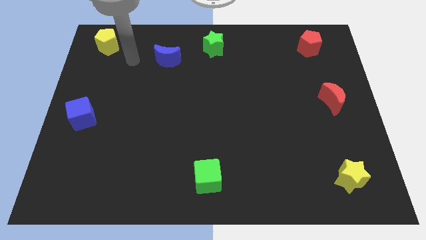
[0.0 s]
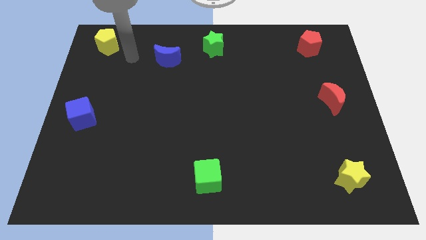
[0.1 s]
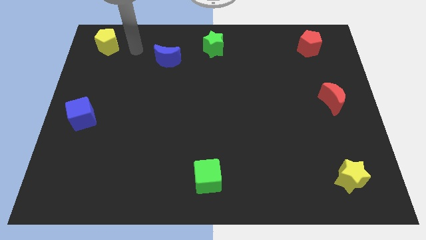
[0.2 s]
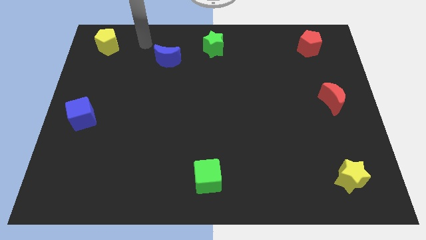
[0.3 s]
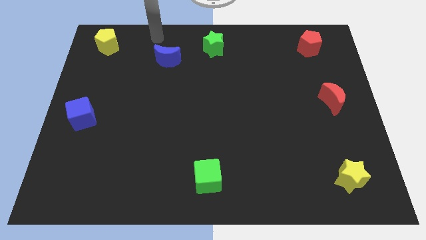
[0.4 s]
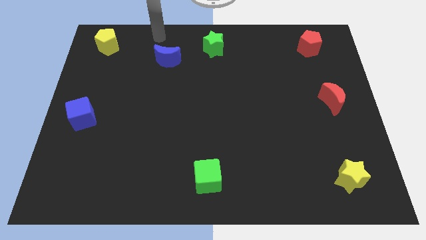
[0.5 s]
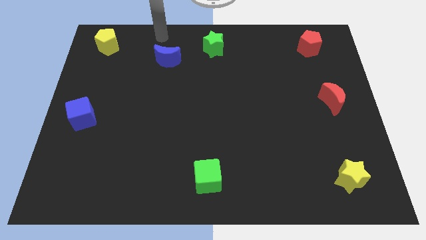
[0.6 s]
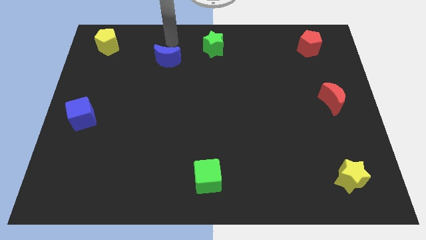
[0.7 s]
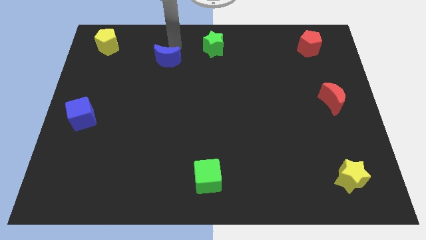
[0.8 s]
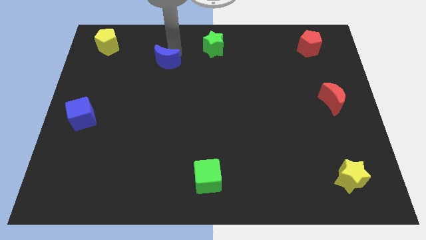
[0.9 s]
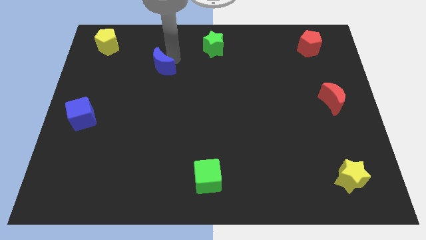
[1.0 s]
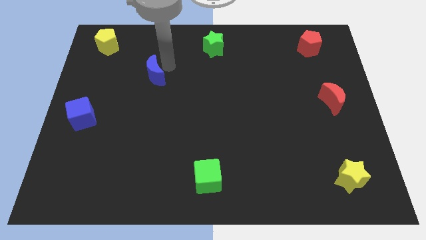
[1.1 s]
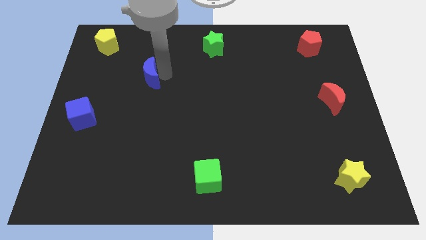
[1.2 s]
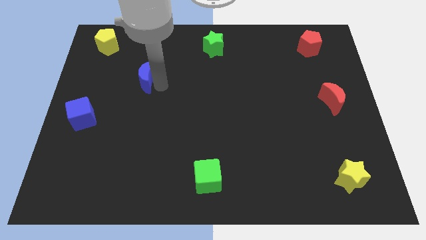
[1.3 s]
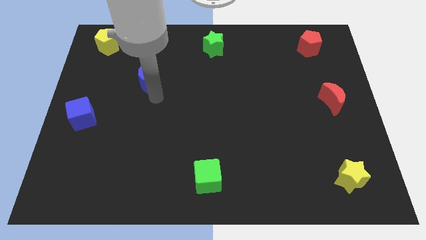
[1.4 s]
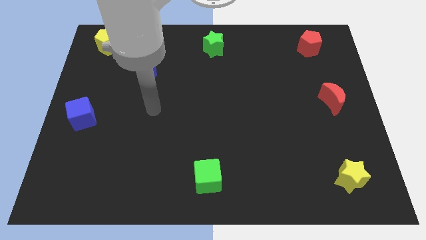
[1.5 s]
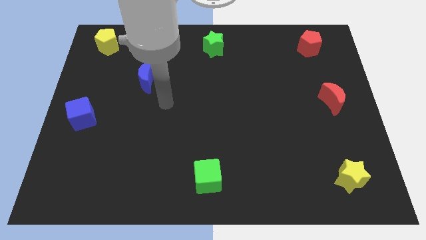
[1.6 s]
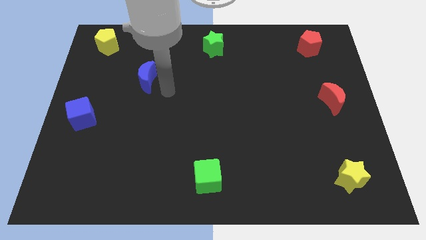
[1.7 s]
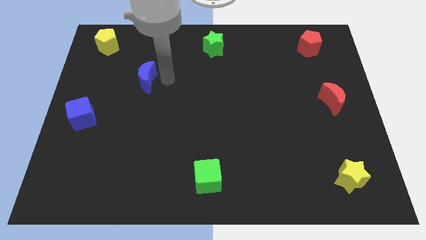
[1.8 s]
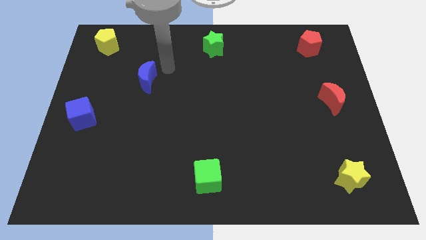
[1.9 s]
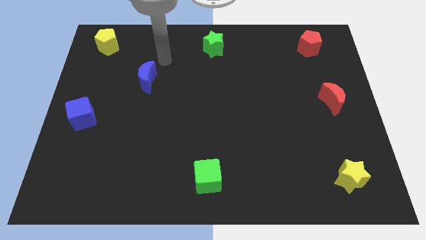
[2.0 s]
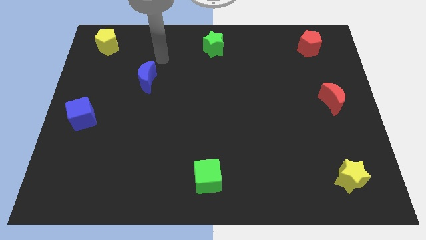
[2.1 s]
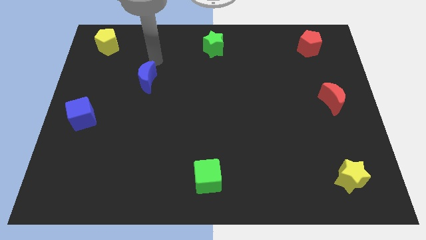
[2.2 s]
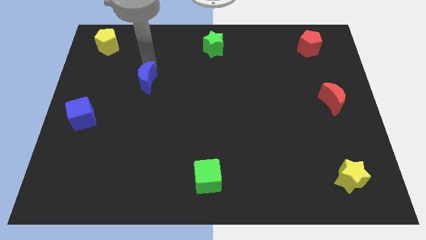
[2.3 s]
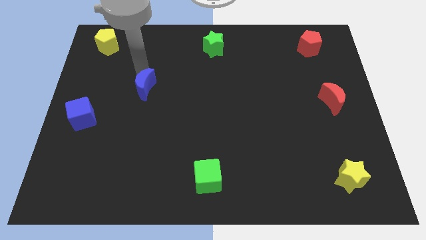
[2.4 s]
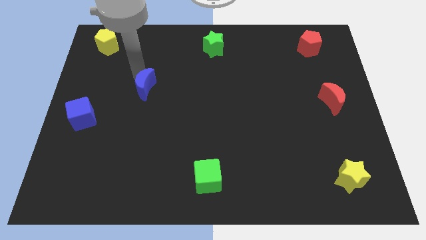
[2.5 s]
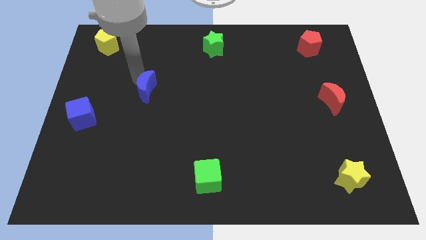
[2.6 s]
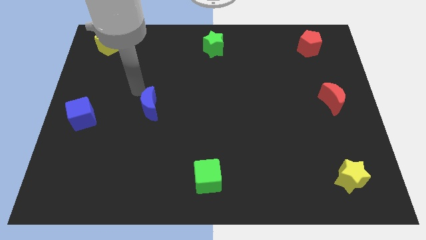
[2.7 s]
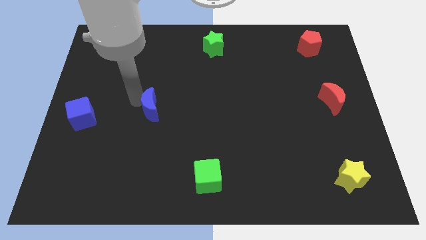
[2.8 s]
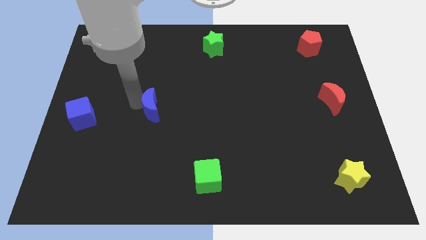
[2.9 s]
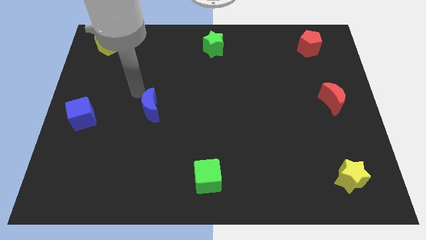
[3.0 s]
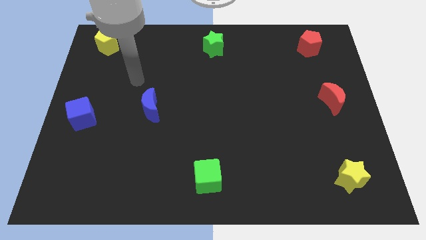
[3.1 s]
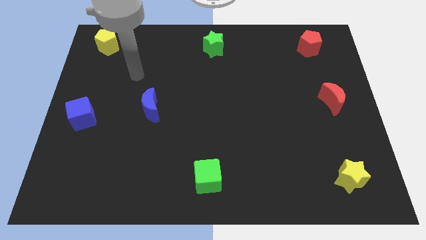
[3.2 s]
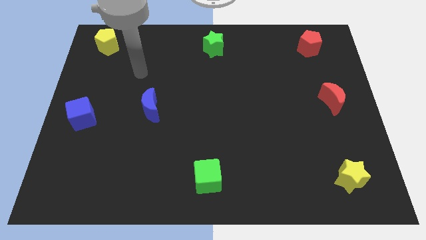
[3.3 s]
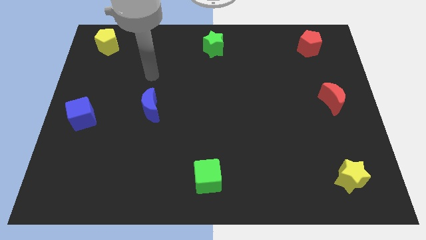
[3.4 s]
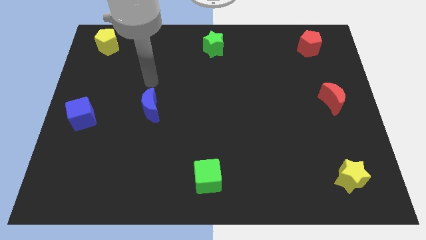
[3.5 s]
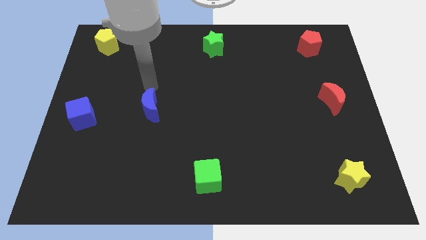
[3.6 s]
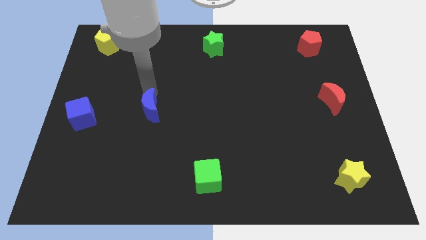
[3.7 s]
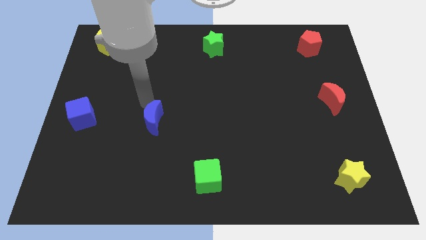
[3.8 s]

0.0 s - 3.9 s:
move the blue crescent to the right of the blue cube

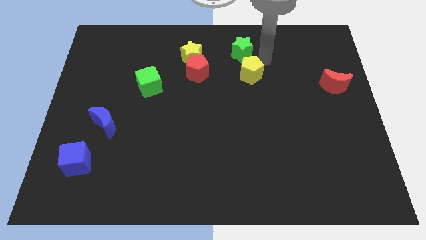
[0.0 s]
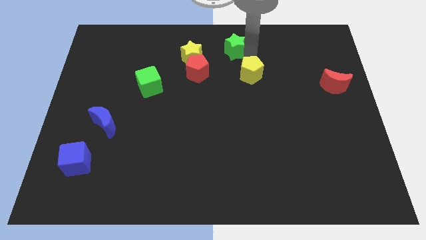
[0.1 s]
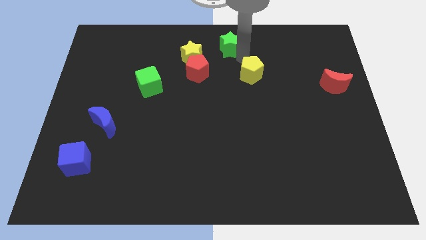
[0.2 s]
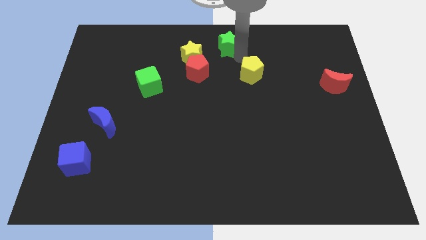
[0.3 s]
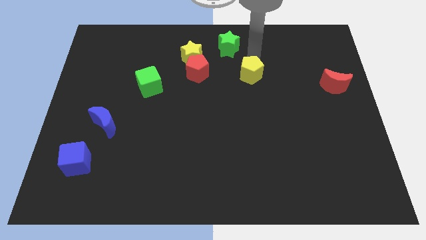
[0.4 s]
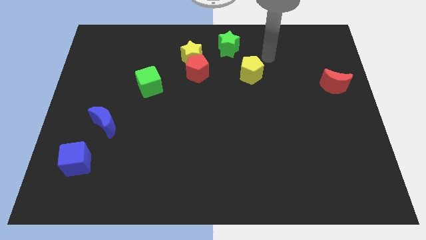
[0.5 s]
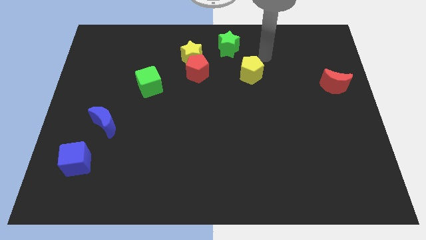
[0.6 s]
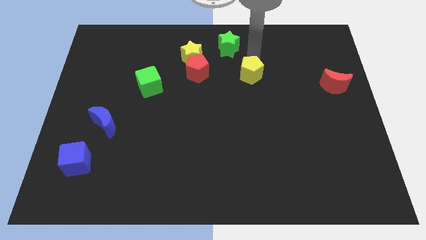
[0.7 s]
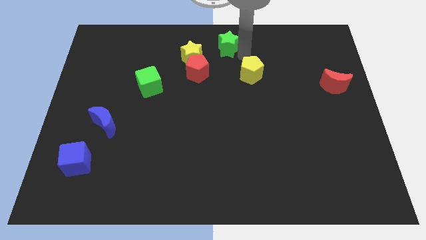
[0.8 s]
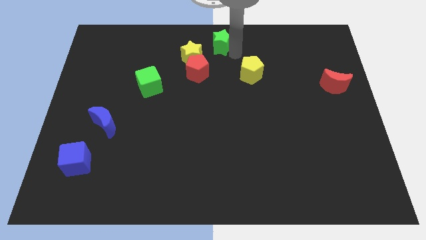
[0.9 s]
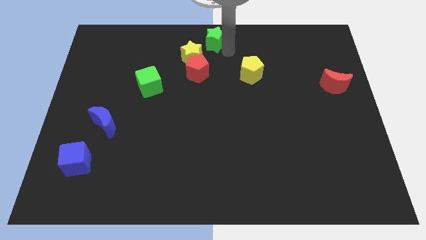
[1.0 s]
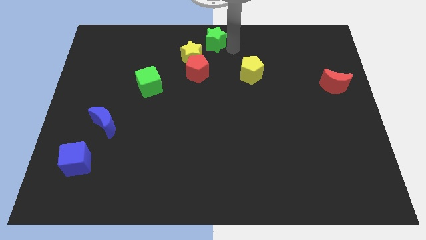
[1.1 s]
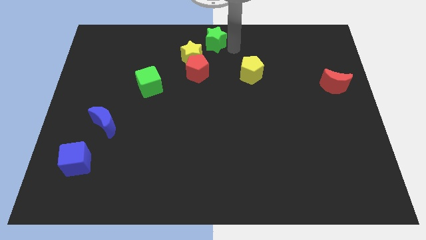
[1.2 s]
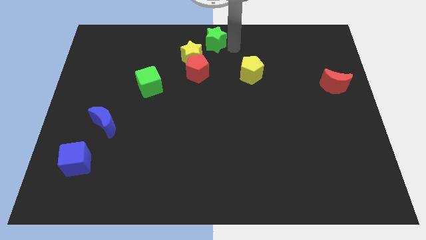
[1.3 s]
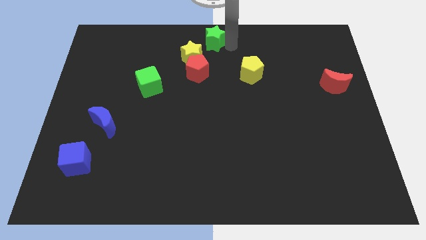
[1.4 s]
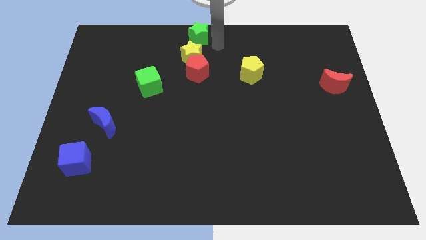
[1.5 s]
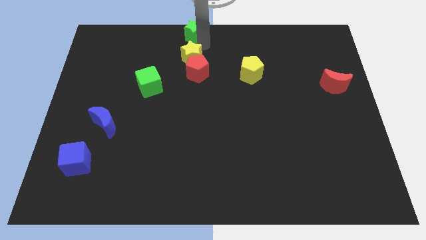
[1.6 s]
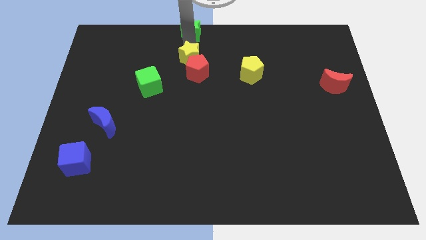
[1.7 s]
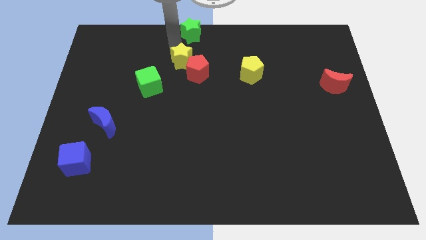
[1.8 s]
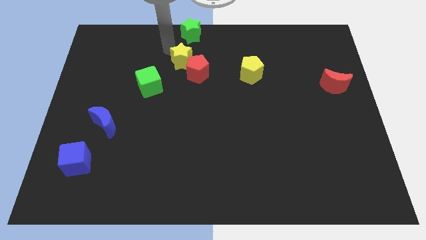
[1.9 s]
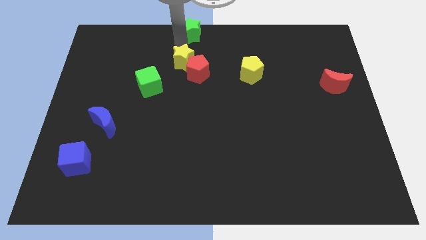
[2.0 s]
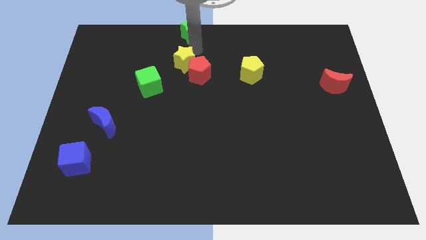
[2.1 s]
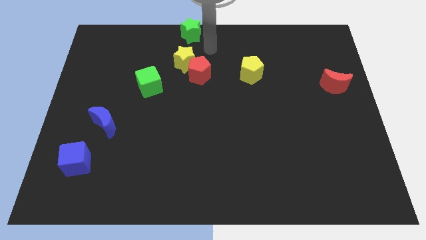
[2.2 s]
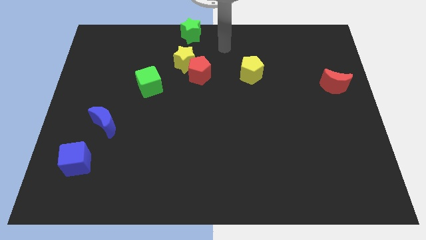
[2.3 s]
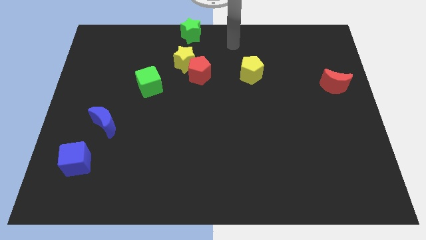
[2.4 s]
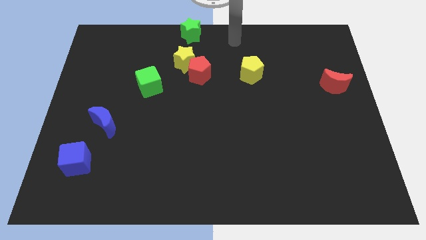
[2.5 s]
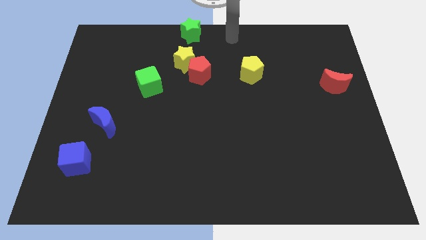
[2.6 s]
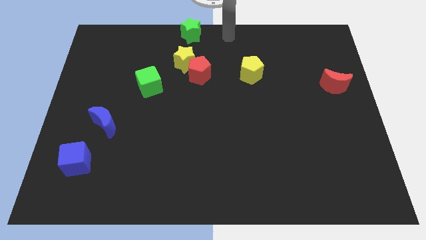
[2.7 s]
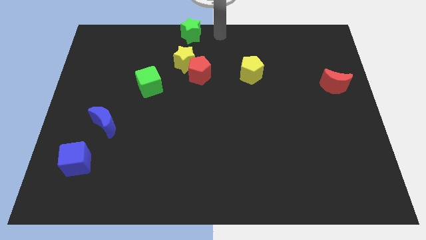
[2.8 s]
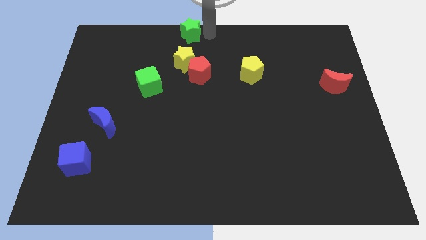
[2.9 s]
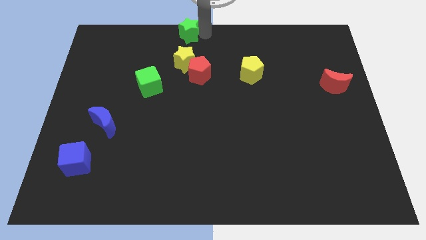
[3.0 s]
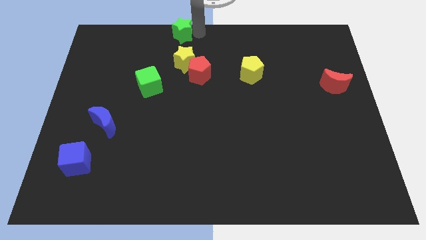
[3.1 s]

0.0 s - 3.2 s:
place the green star above the yellow star

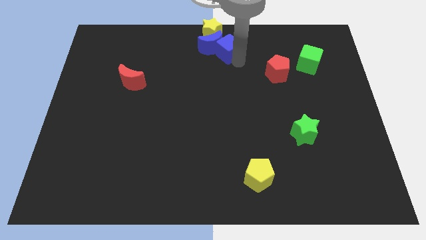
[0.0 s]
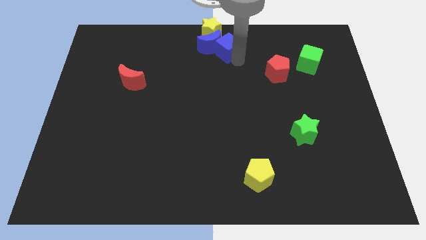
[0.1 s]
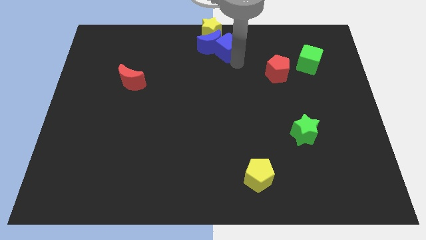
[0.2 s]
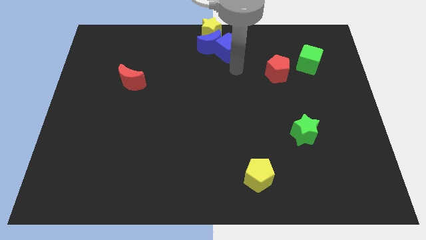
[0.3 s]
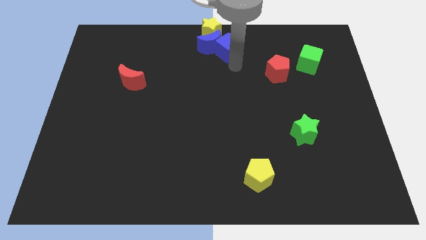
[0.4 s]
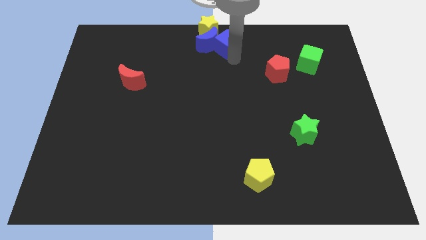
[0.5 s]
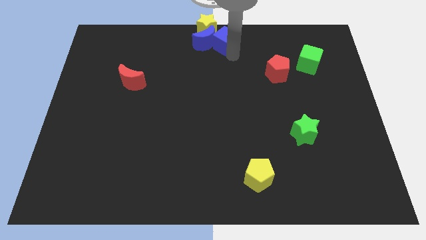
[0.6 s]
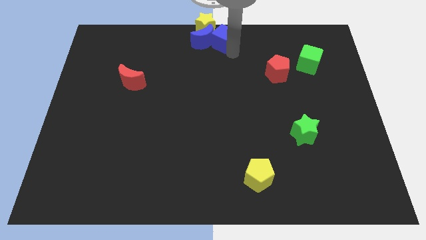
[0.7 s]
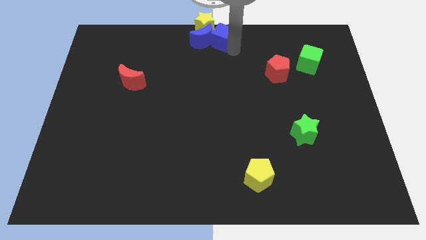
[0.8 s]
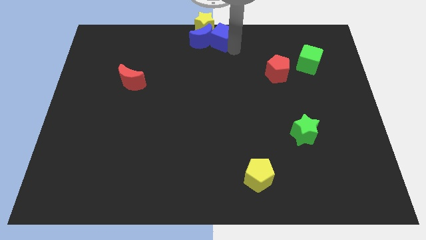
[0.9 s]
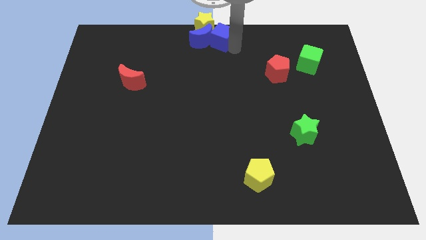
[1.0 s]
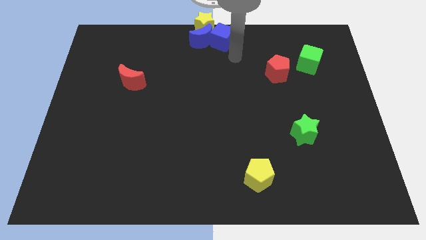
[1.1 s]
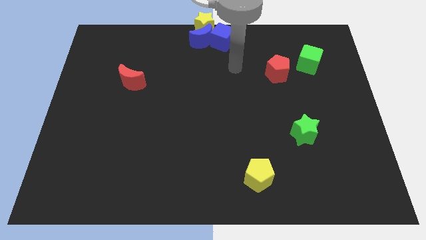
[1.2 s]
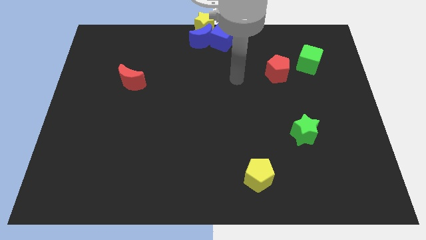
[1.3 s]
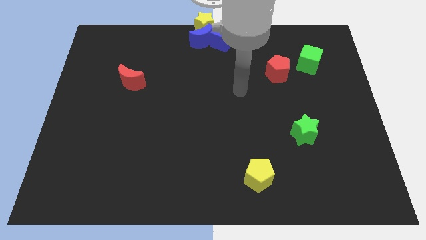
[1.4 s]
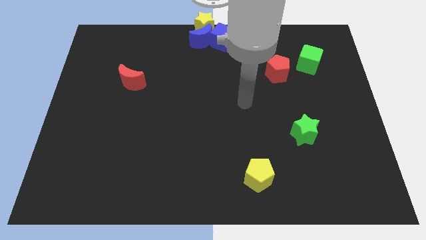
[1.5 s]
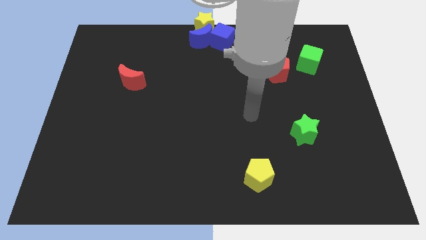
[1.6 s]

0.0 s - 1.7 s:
push the group of blocks slightly up

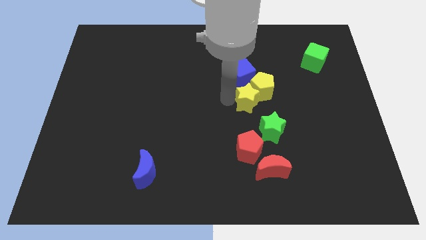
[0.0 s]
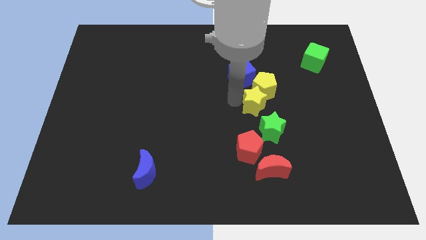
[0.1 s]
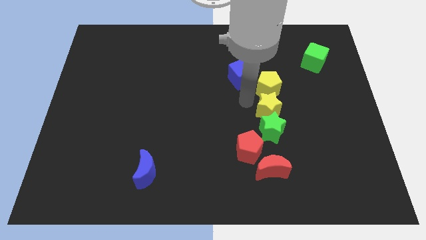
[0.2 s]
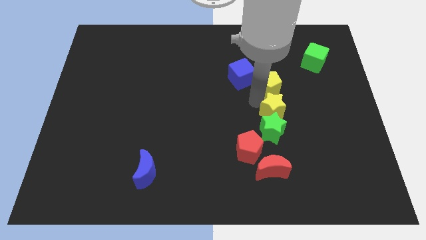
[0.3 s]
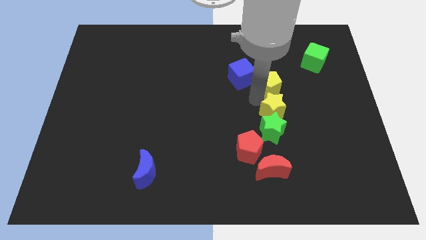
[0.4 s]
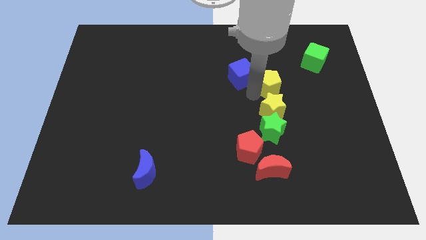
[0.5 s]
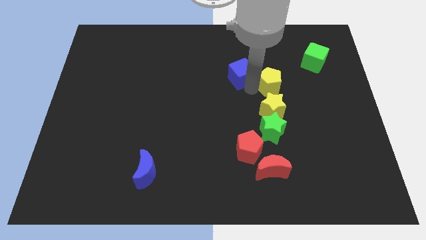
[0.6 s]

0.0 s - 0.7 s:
place the yellow star close to the green star
